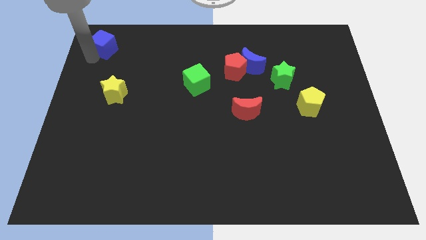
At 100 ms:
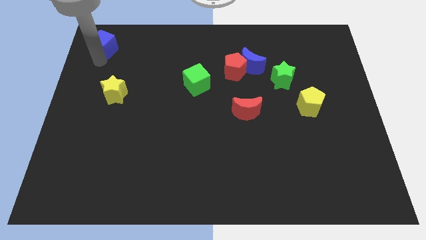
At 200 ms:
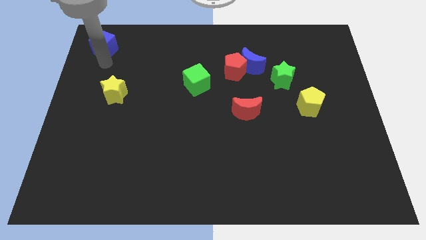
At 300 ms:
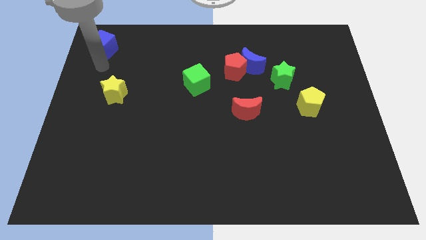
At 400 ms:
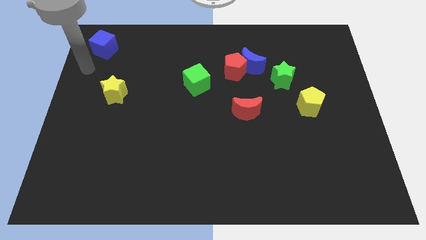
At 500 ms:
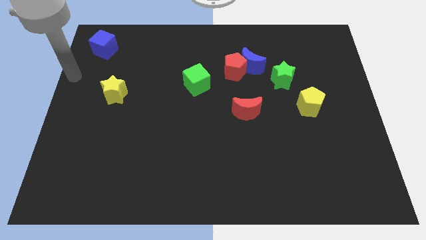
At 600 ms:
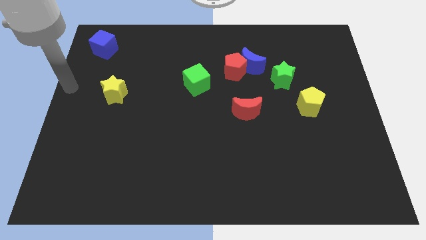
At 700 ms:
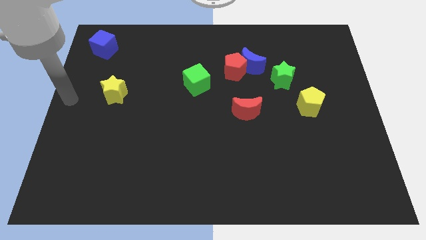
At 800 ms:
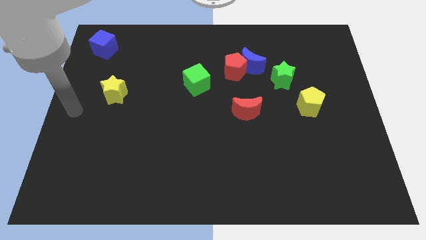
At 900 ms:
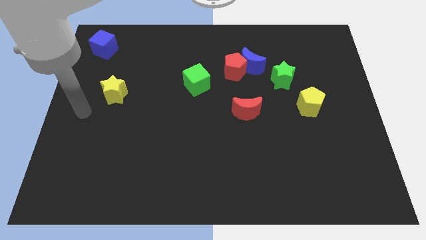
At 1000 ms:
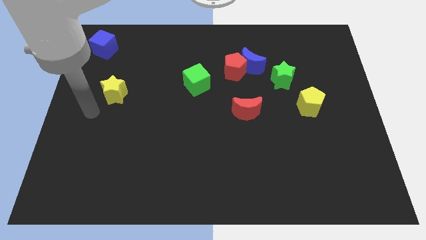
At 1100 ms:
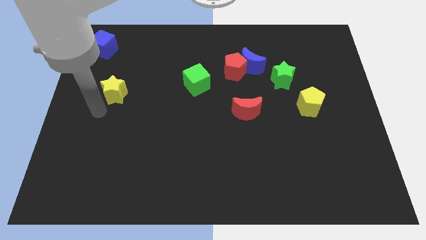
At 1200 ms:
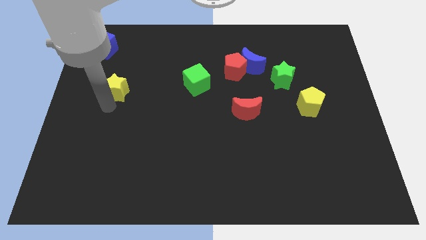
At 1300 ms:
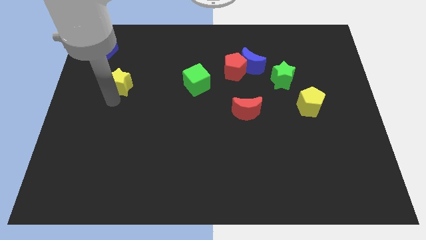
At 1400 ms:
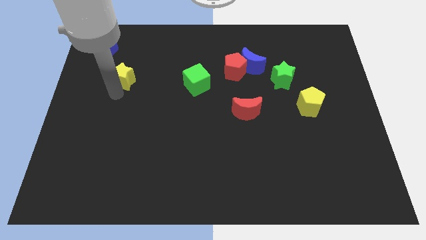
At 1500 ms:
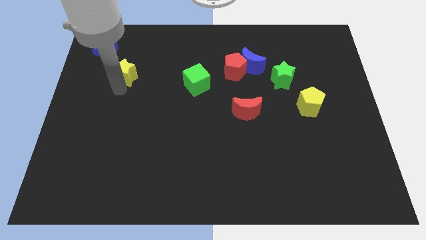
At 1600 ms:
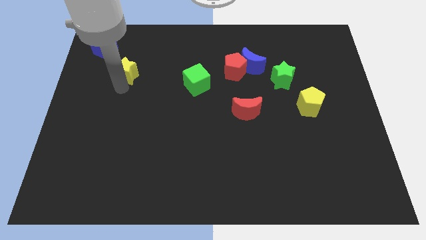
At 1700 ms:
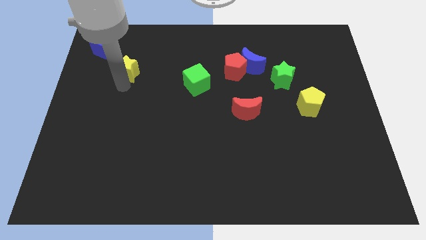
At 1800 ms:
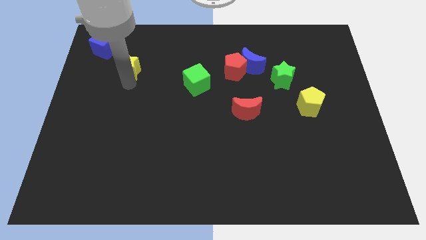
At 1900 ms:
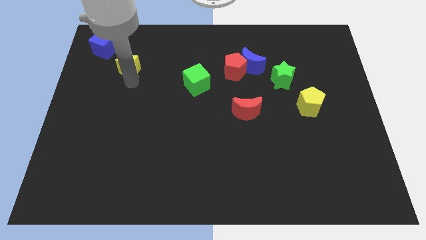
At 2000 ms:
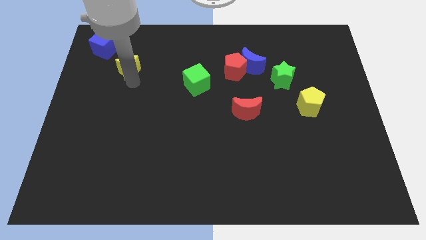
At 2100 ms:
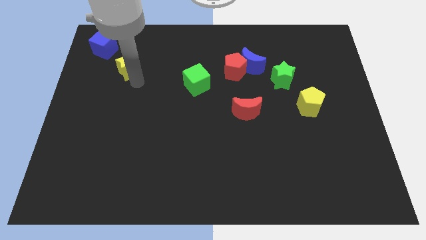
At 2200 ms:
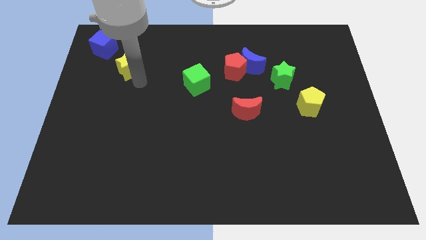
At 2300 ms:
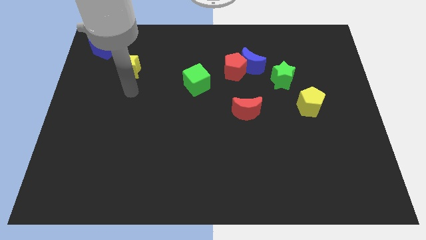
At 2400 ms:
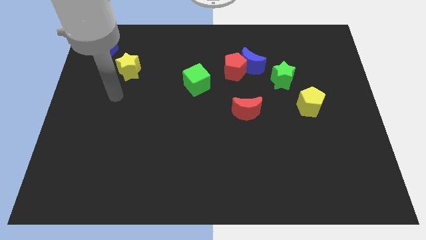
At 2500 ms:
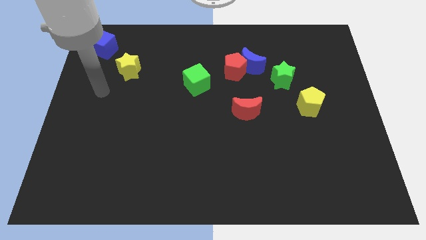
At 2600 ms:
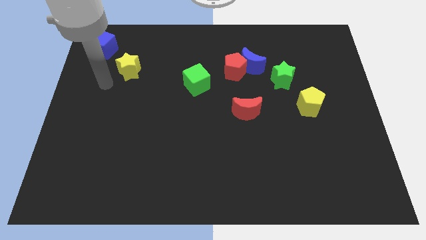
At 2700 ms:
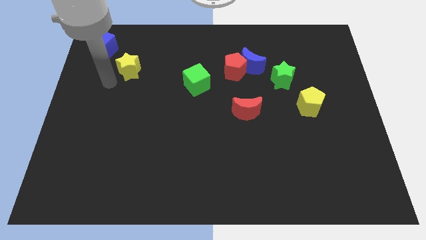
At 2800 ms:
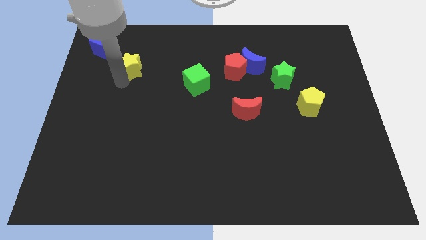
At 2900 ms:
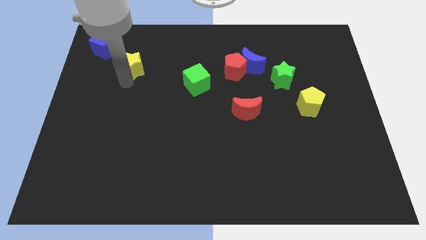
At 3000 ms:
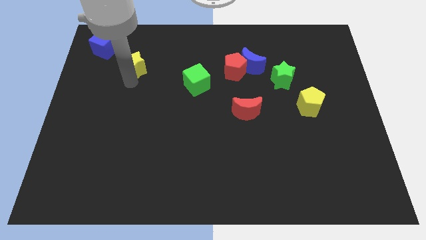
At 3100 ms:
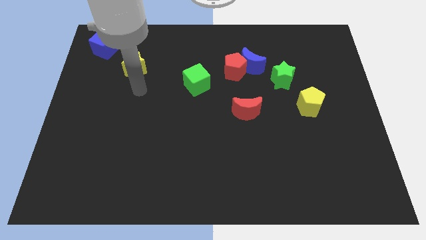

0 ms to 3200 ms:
place the yellow star diagonally below the bottom right side of the blue cube

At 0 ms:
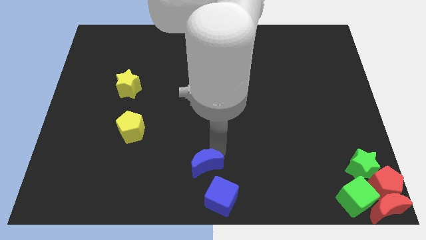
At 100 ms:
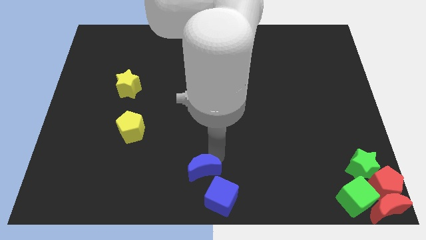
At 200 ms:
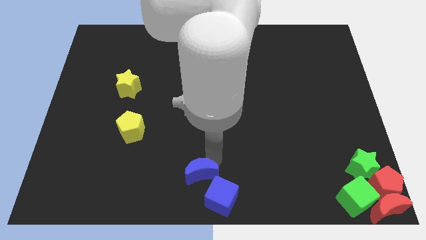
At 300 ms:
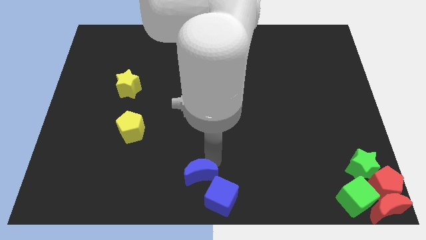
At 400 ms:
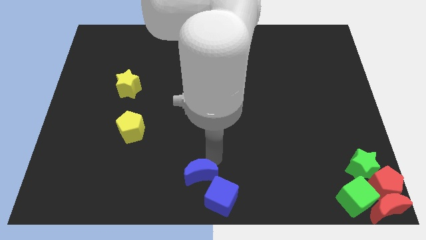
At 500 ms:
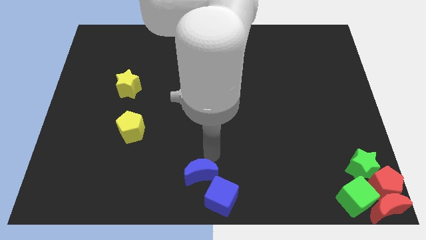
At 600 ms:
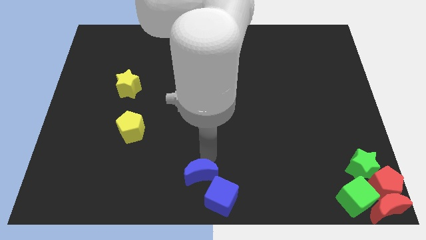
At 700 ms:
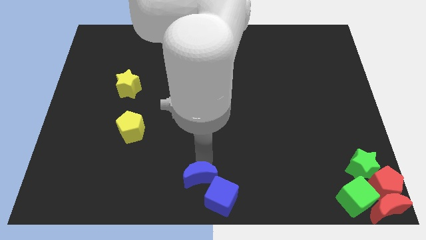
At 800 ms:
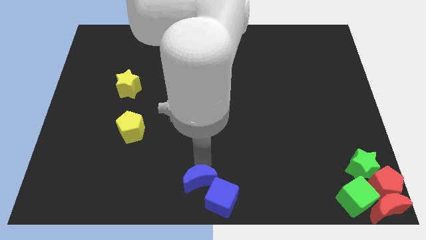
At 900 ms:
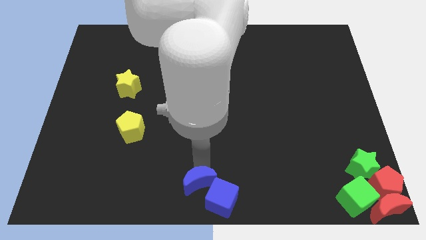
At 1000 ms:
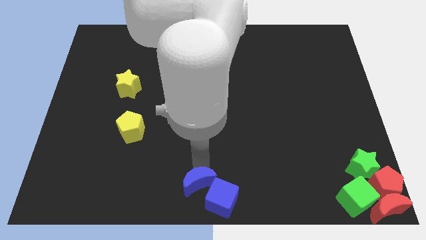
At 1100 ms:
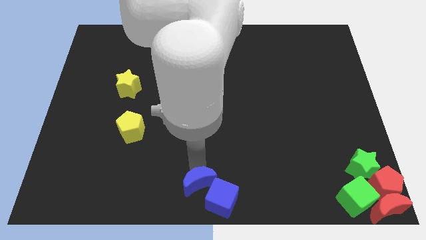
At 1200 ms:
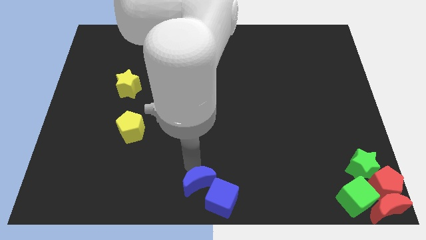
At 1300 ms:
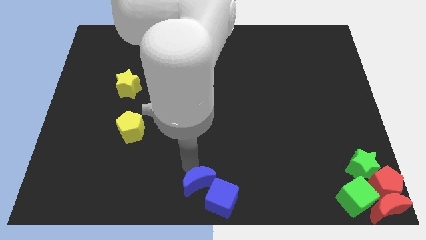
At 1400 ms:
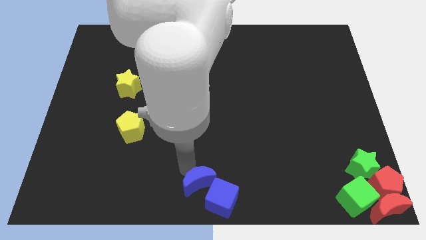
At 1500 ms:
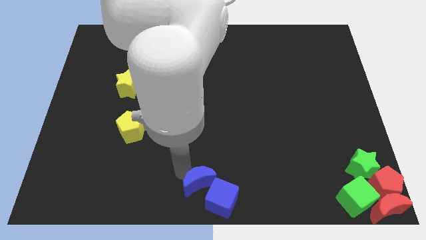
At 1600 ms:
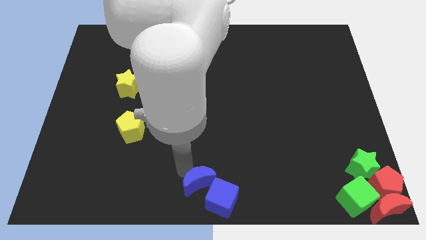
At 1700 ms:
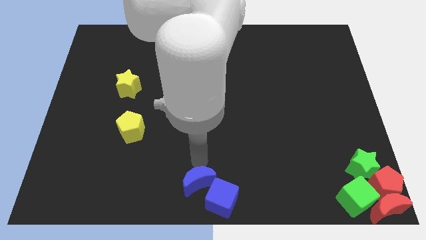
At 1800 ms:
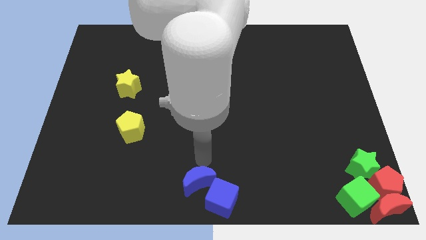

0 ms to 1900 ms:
push the blue moon into the blue cube

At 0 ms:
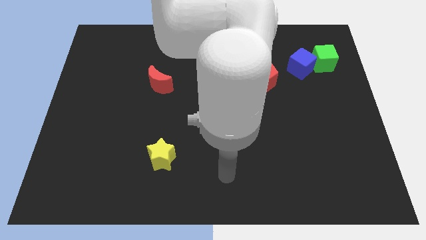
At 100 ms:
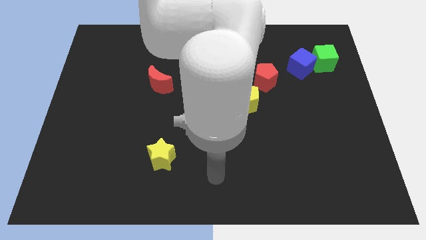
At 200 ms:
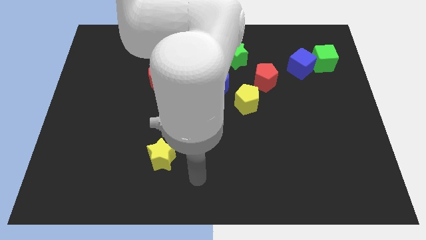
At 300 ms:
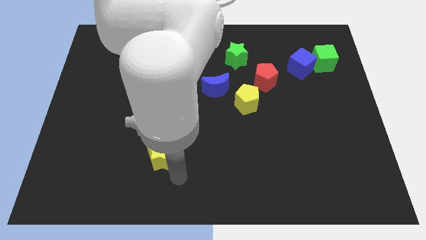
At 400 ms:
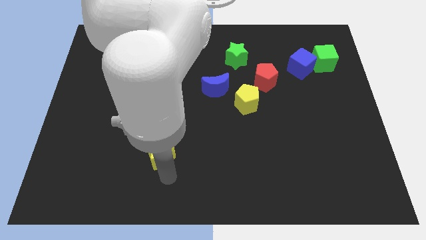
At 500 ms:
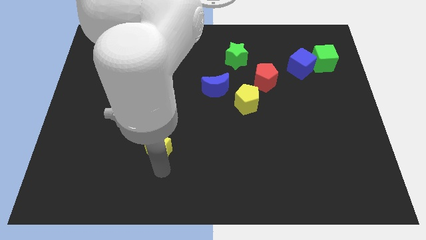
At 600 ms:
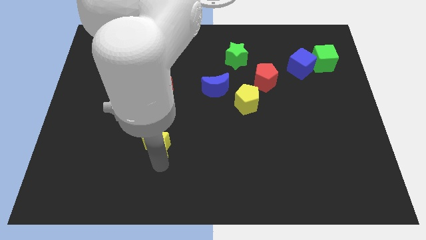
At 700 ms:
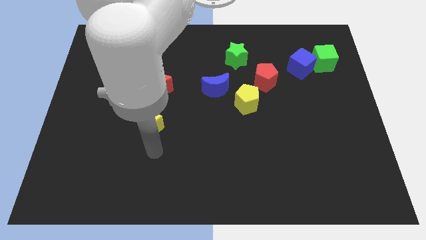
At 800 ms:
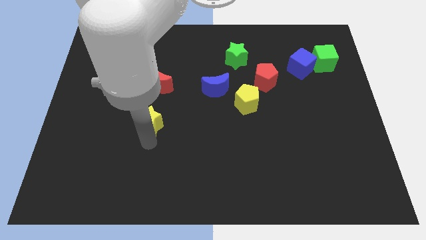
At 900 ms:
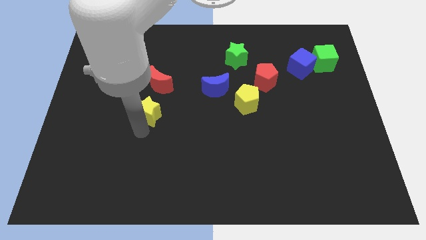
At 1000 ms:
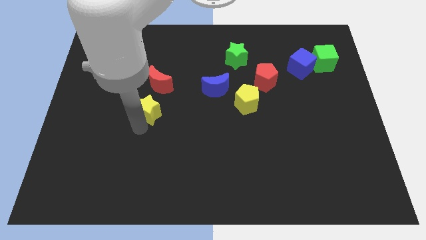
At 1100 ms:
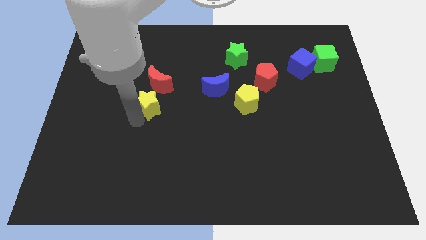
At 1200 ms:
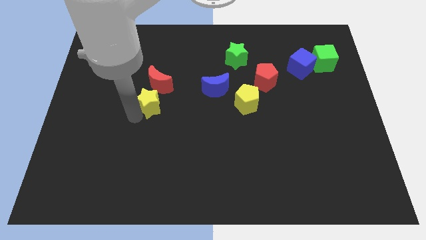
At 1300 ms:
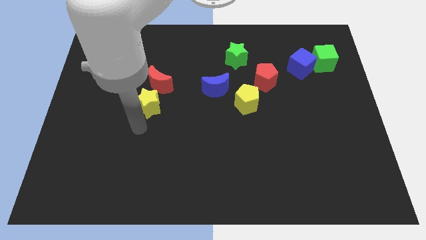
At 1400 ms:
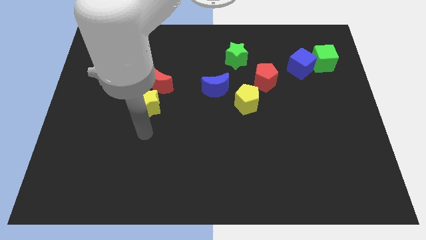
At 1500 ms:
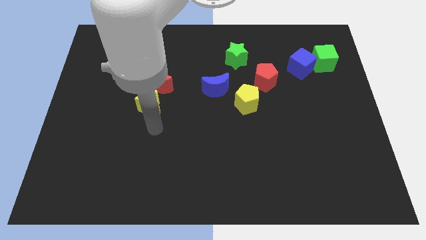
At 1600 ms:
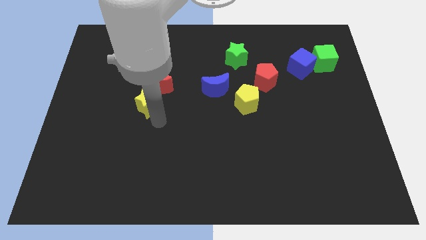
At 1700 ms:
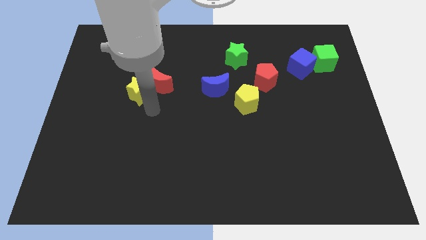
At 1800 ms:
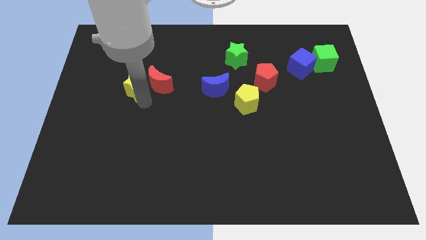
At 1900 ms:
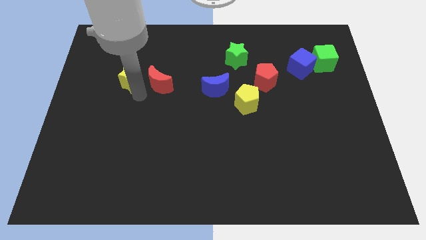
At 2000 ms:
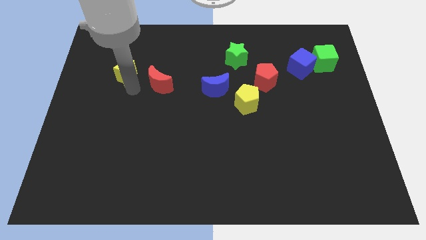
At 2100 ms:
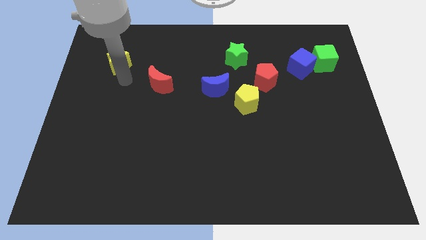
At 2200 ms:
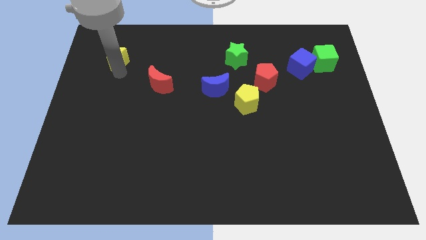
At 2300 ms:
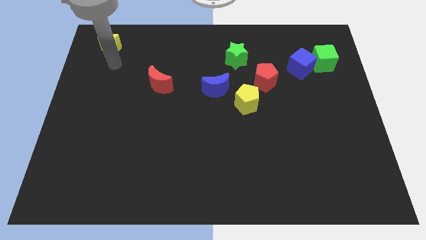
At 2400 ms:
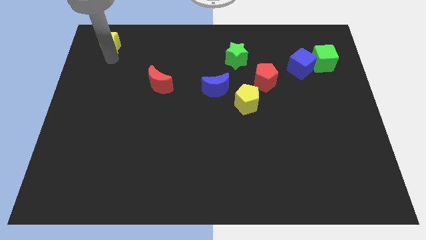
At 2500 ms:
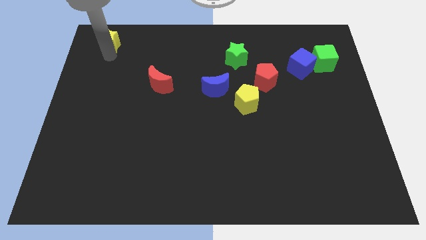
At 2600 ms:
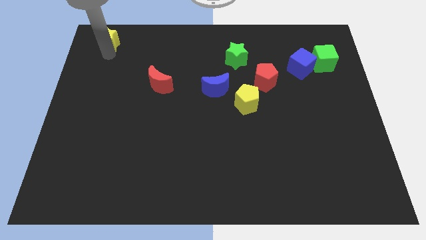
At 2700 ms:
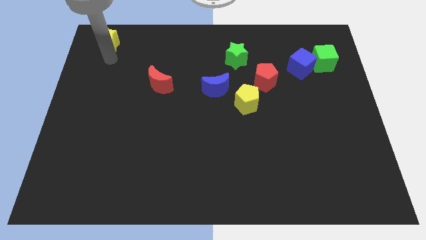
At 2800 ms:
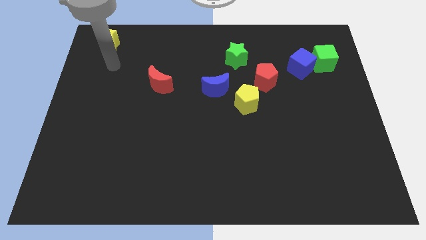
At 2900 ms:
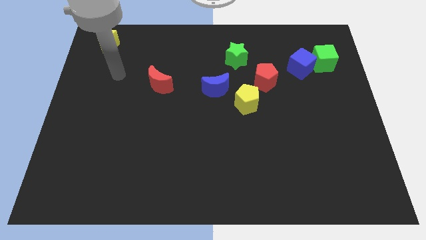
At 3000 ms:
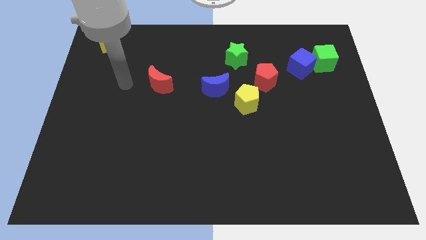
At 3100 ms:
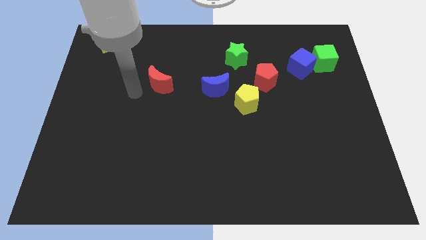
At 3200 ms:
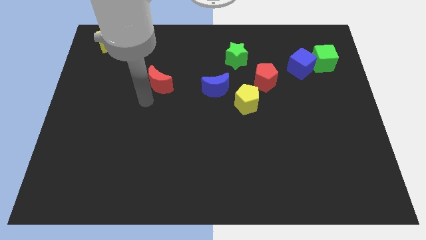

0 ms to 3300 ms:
push the yellow star to the top left of the red crescent

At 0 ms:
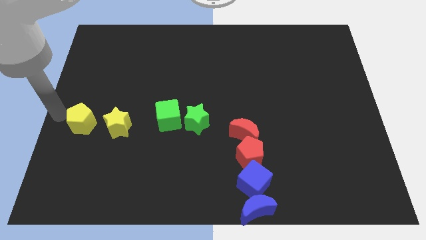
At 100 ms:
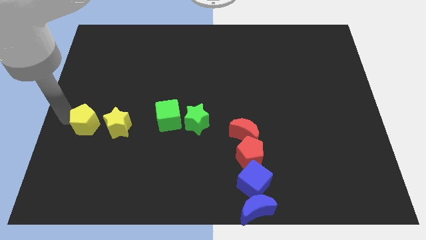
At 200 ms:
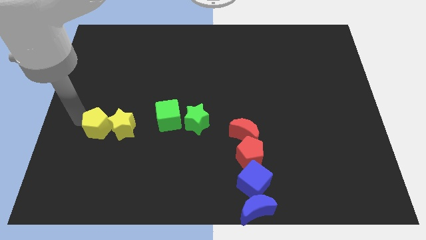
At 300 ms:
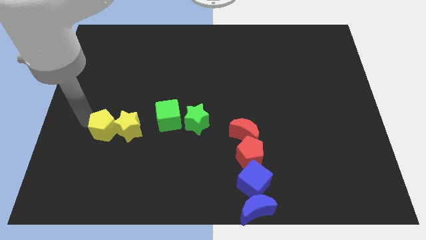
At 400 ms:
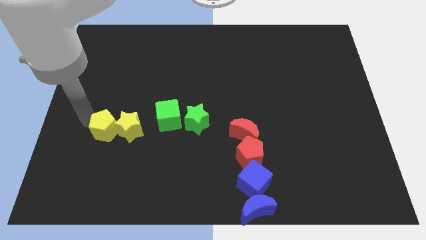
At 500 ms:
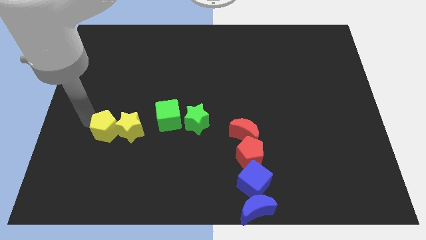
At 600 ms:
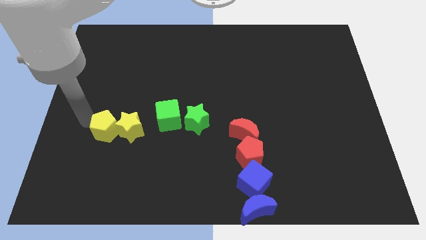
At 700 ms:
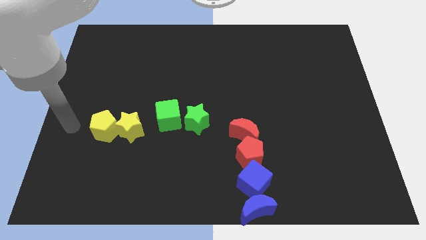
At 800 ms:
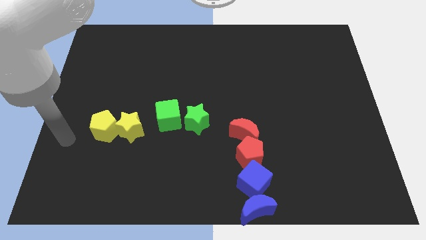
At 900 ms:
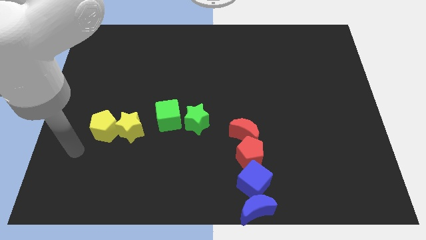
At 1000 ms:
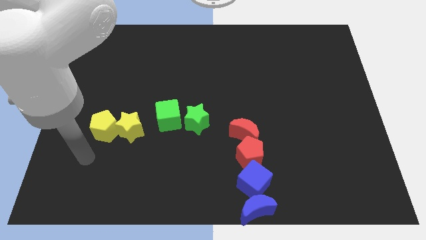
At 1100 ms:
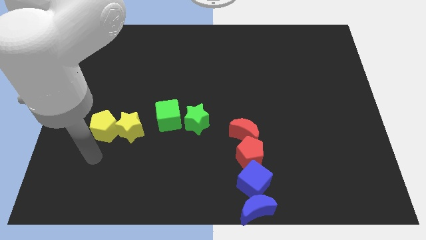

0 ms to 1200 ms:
move yellow pentagon into yellow star
